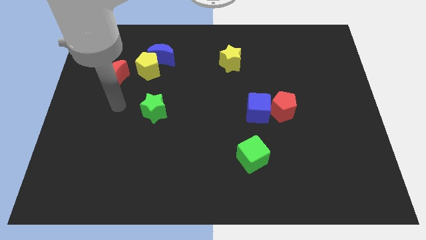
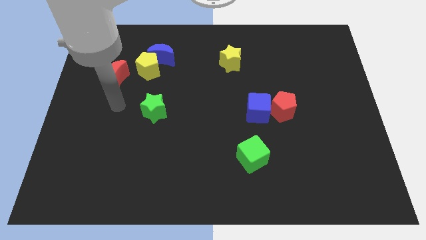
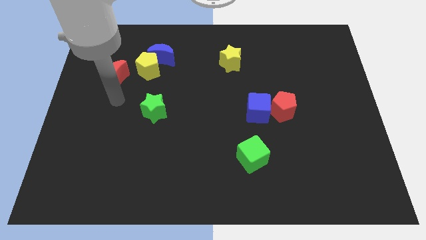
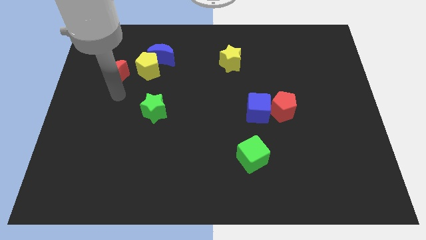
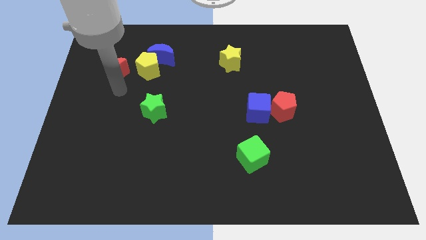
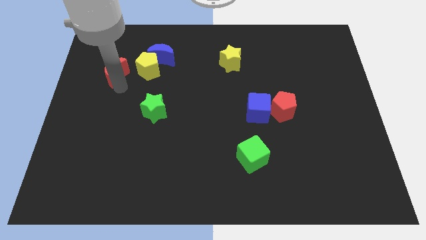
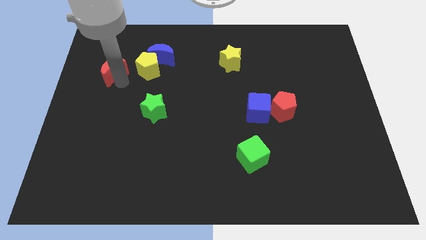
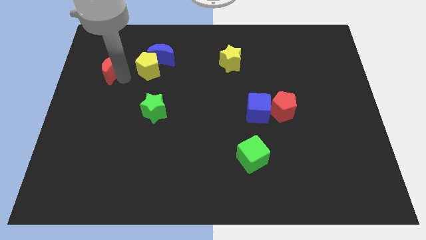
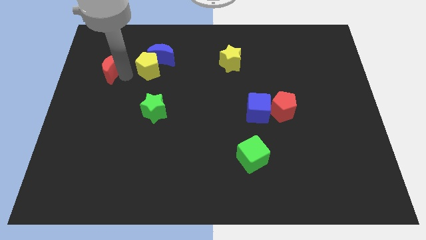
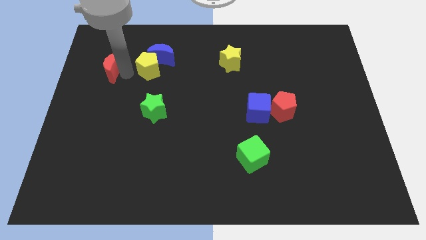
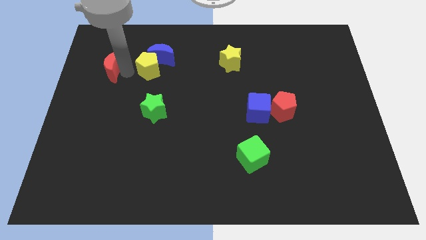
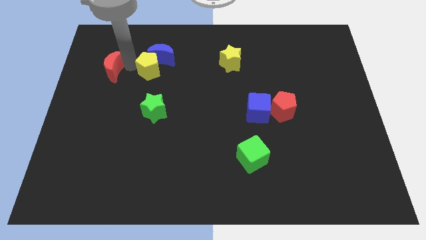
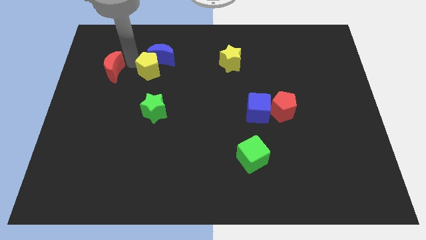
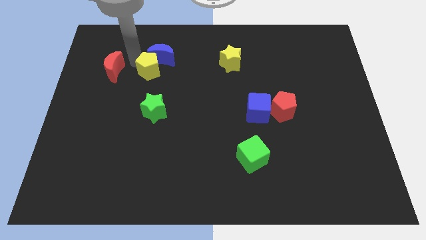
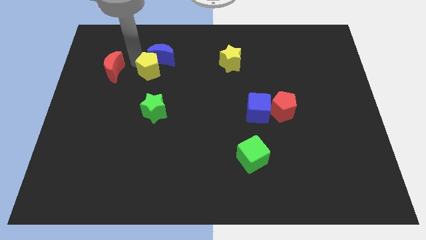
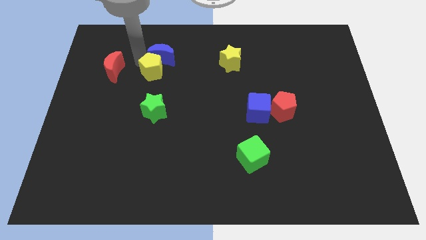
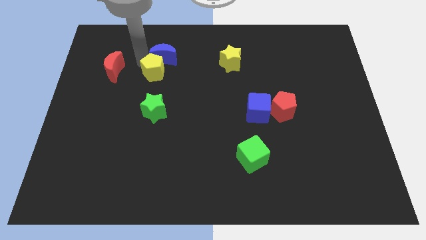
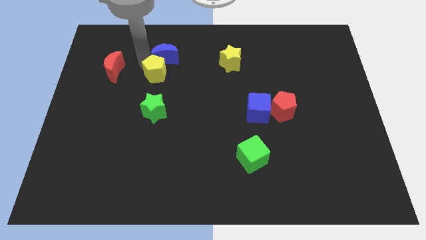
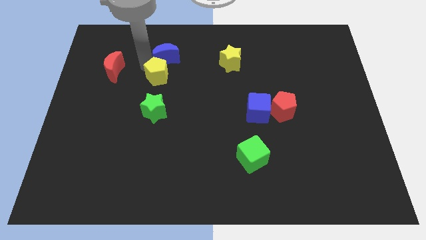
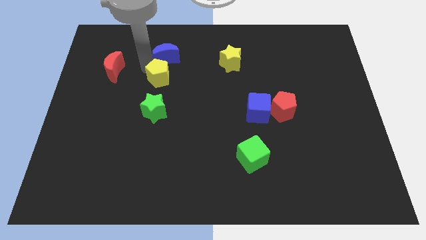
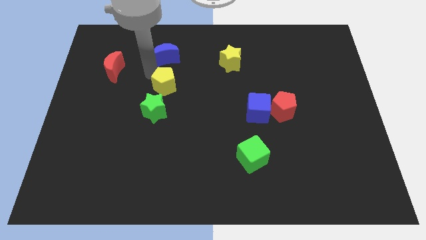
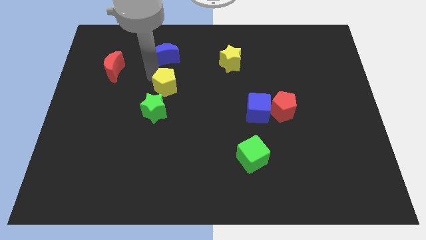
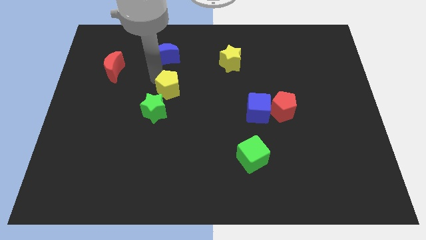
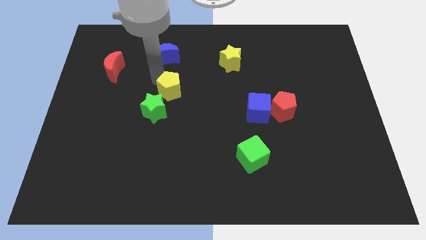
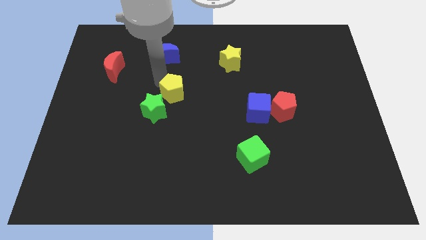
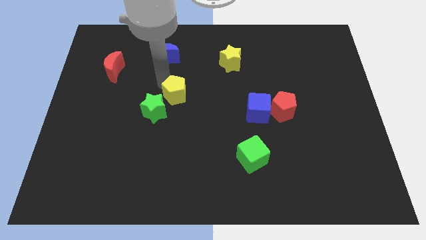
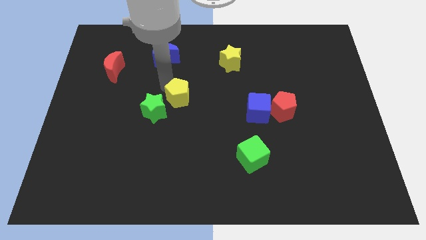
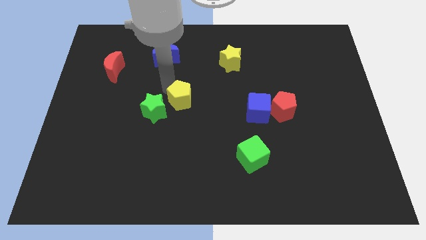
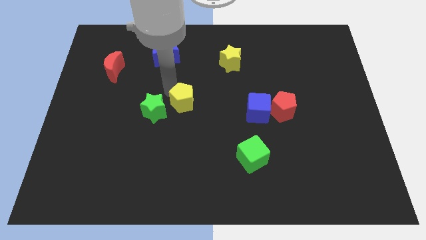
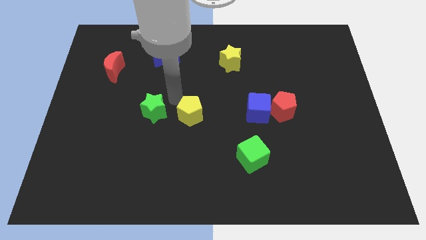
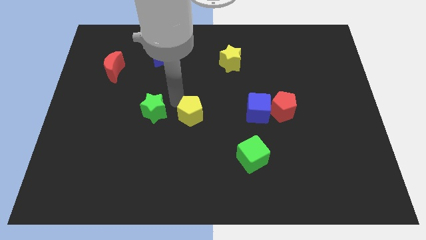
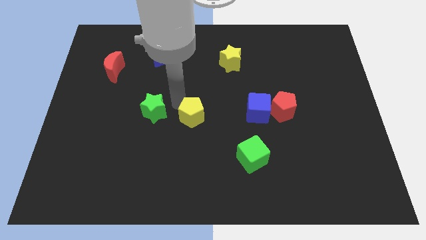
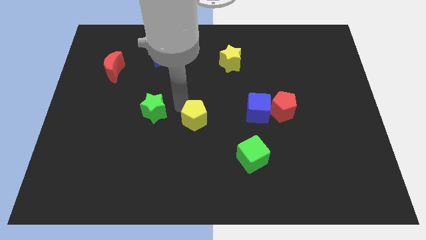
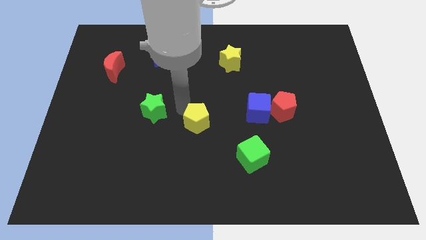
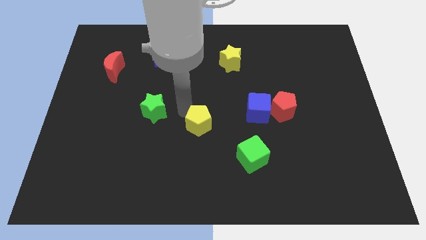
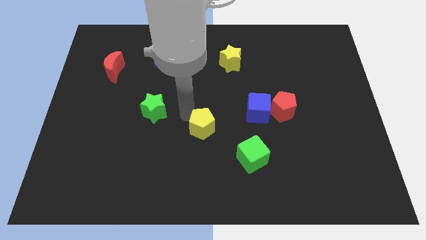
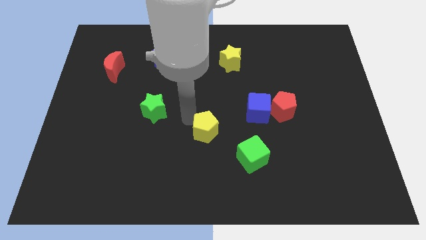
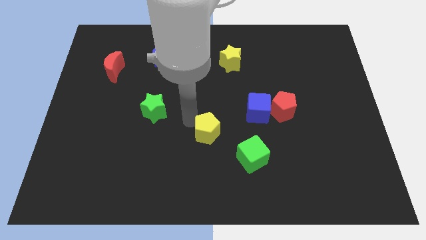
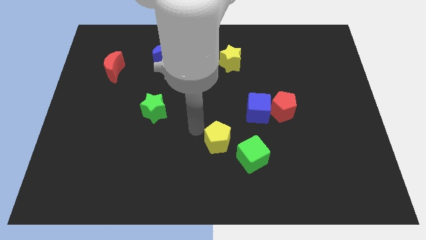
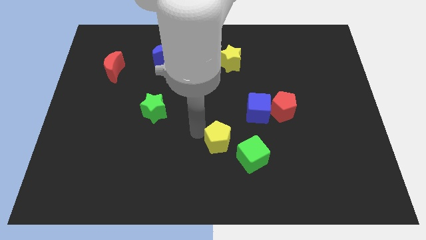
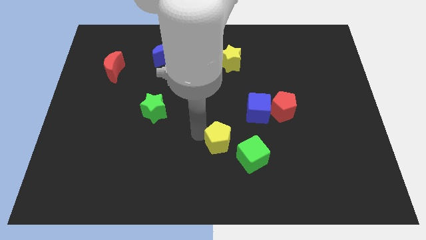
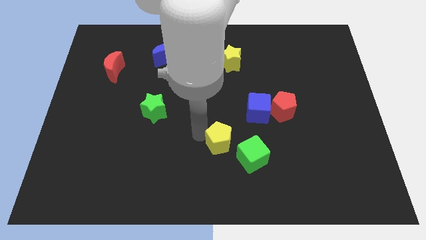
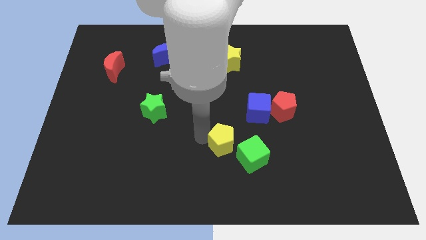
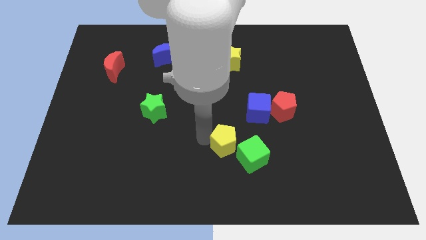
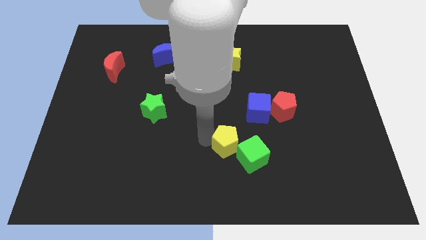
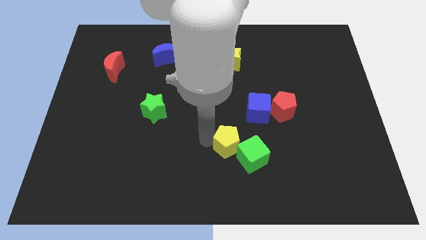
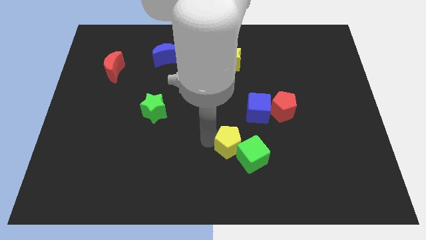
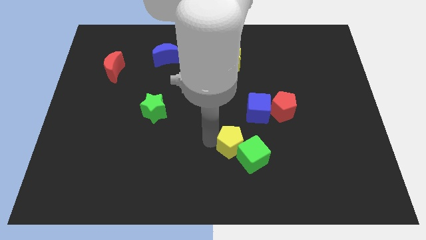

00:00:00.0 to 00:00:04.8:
slide the yellow pentagon to the green cube

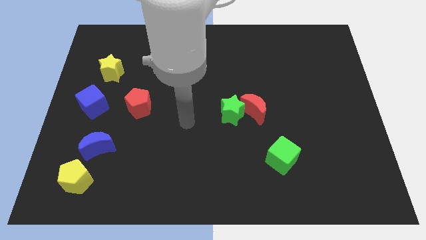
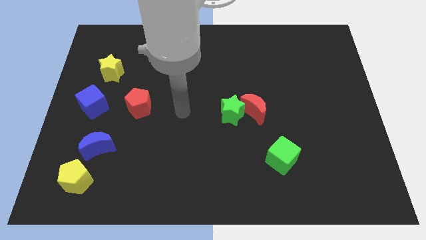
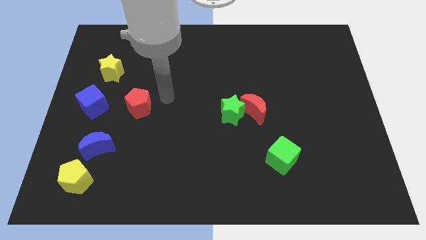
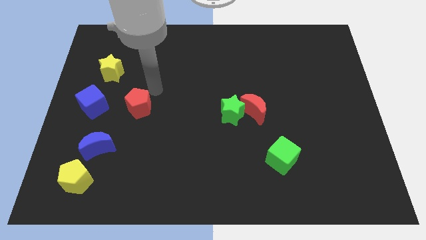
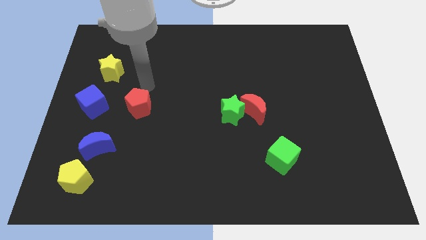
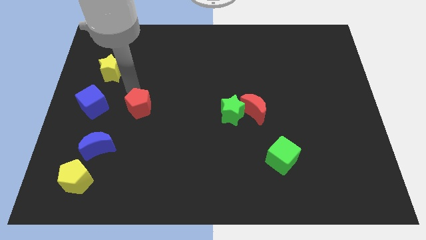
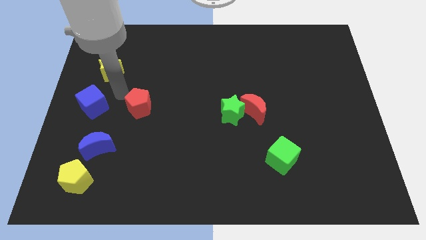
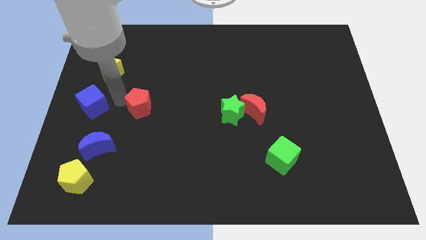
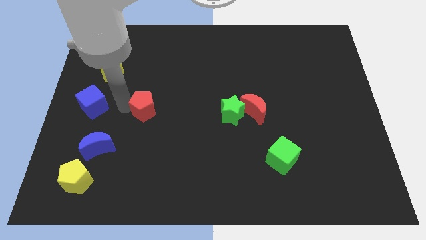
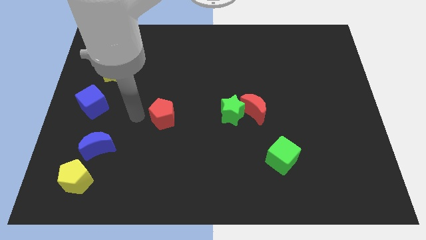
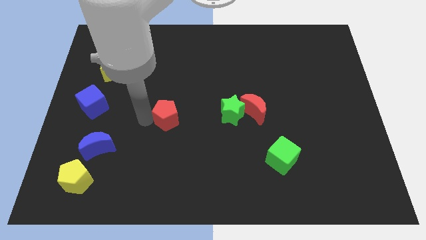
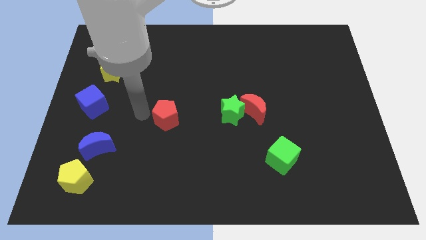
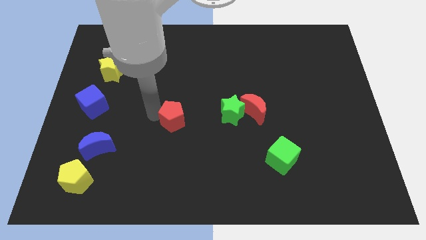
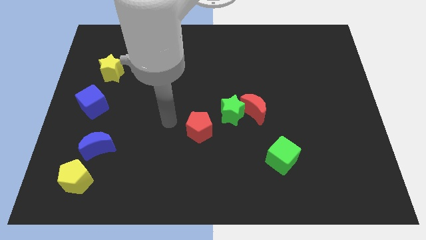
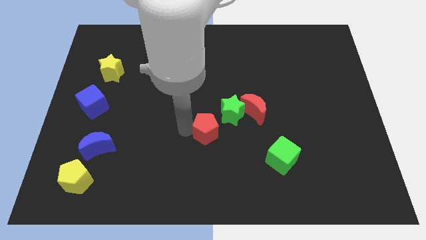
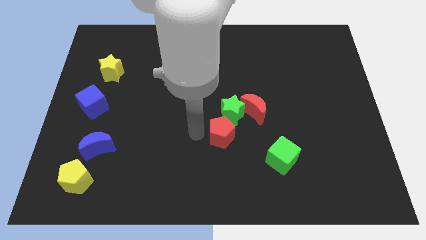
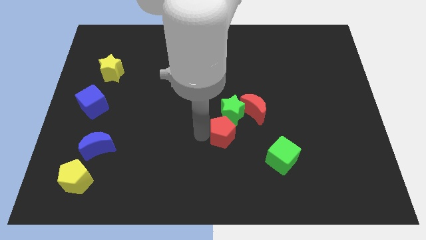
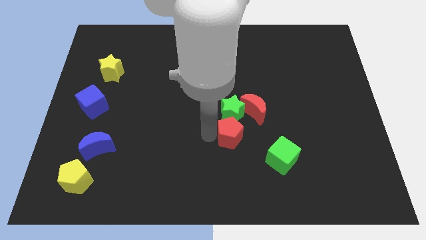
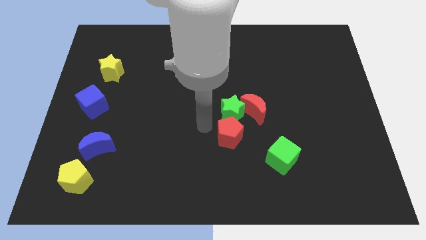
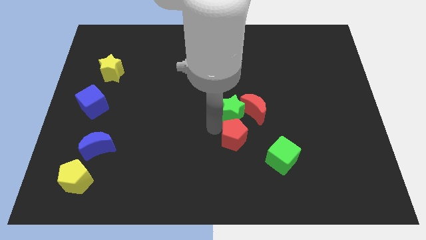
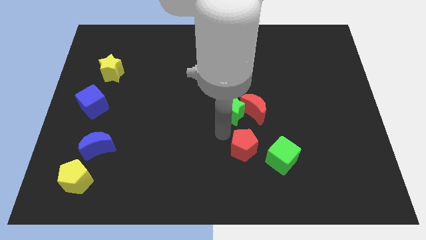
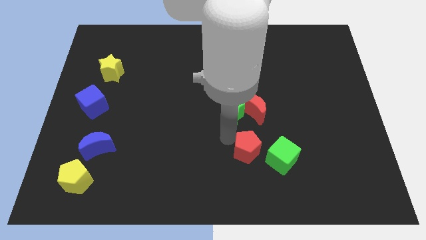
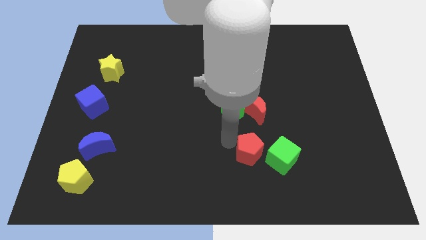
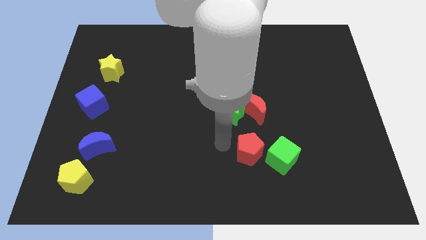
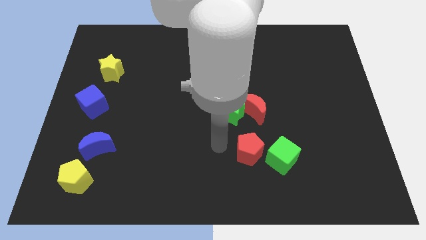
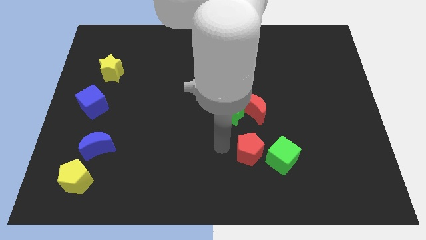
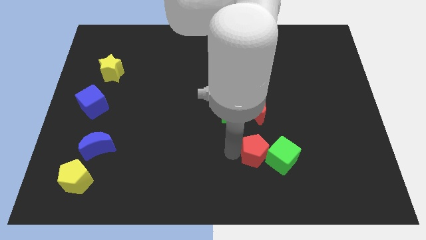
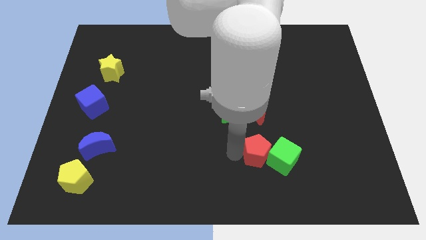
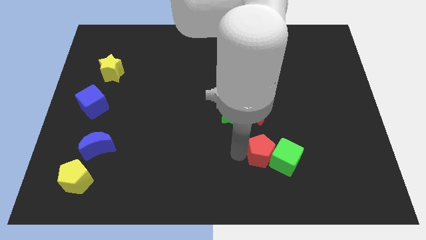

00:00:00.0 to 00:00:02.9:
slide the red pentagon to the green cube

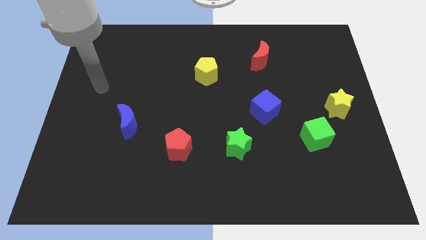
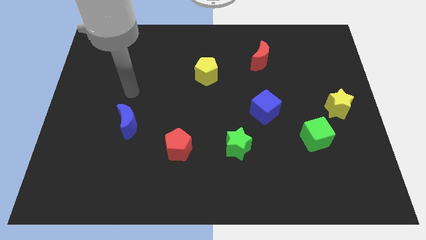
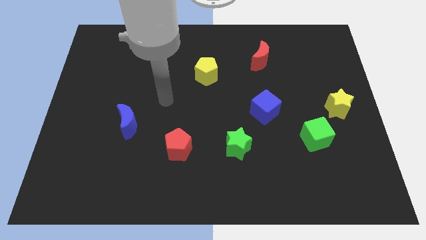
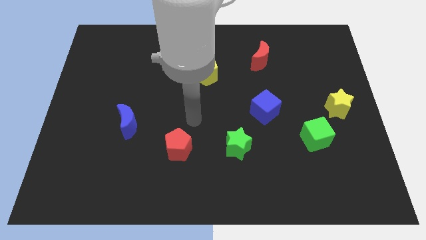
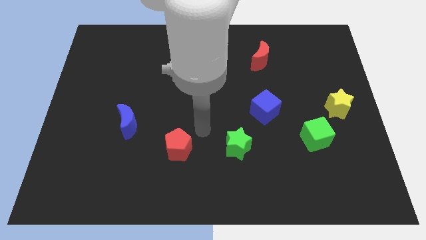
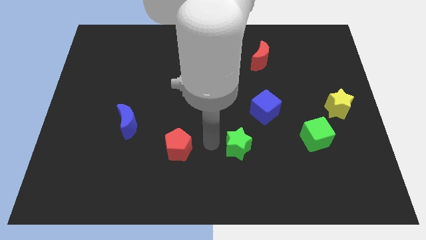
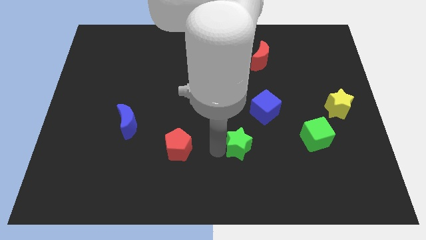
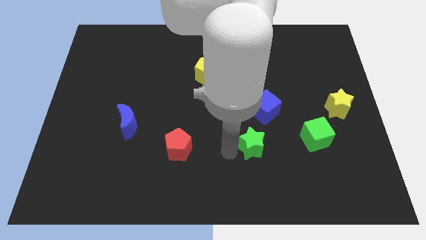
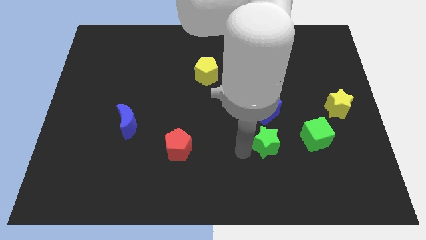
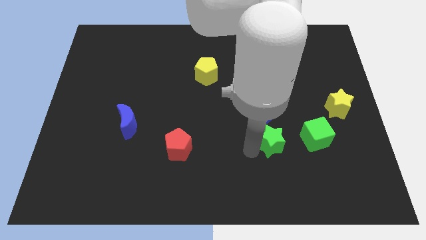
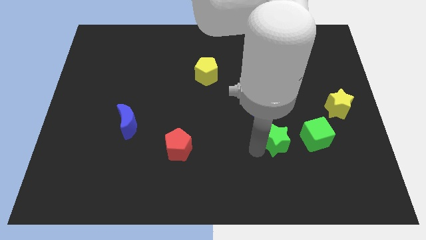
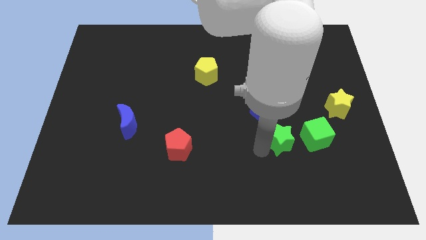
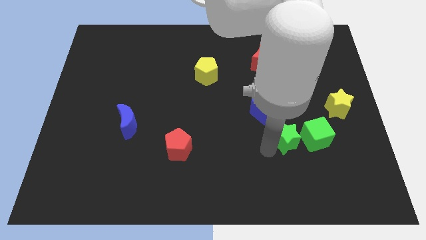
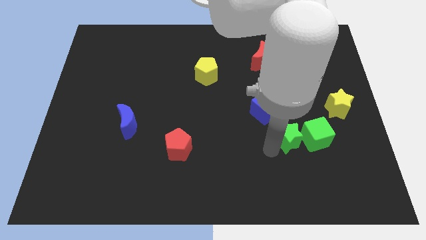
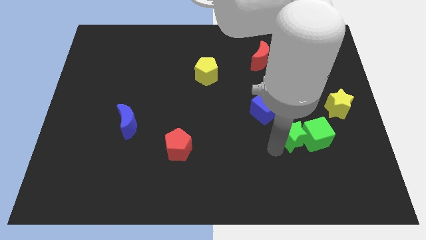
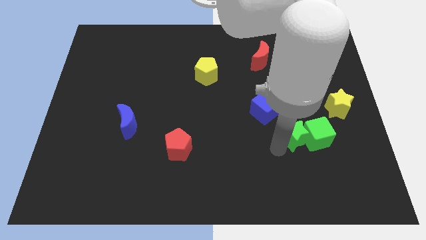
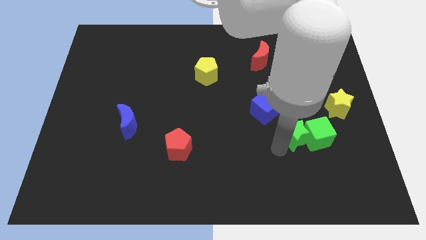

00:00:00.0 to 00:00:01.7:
move the green star close to the green cube
